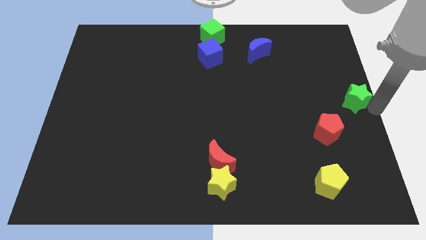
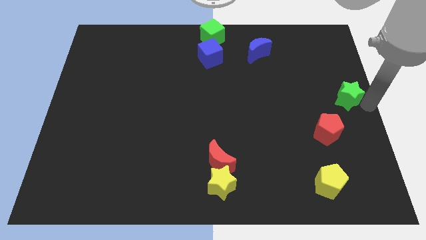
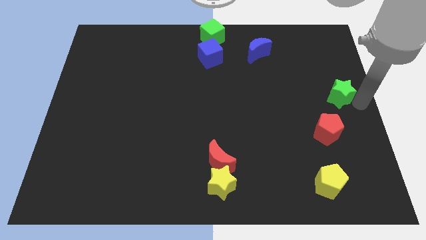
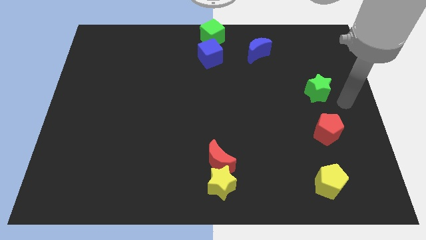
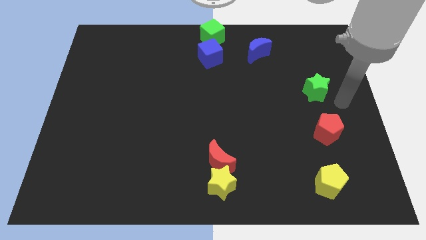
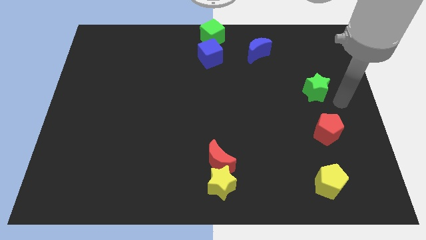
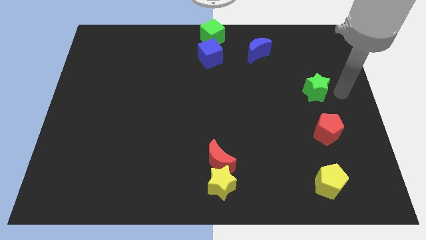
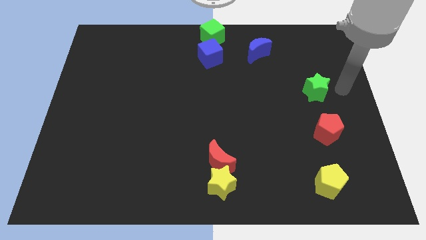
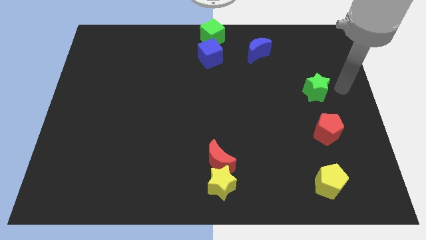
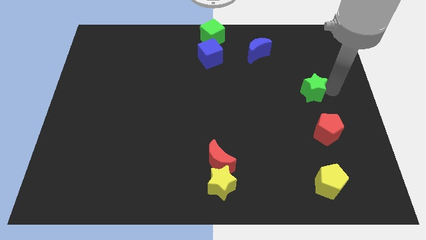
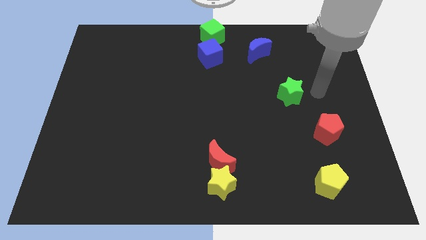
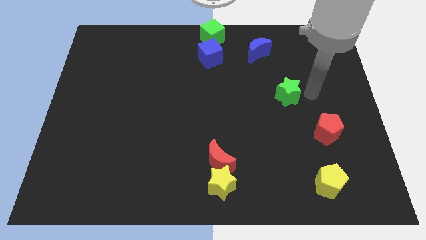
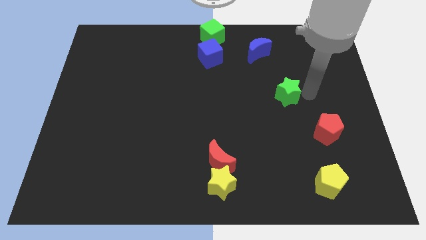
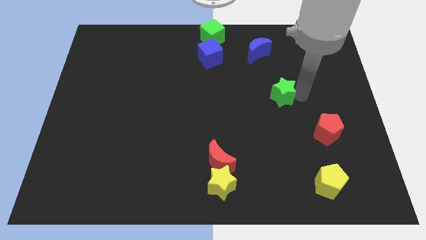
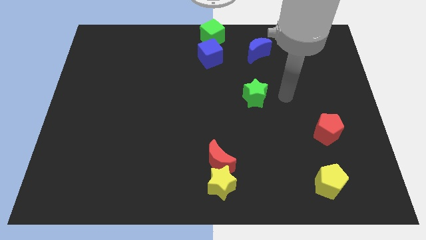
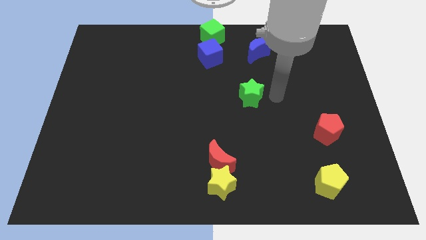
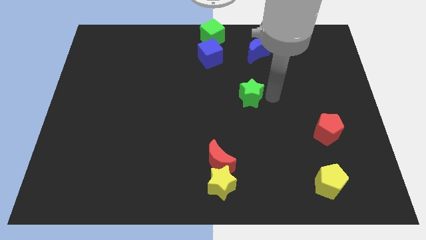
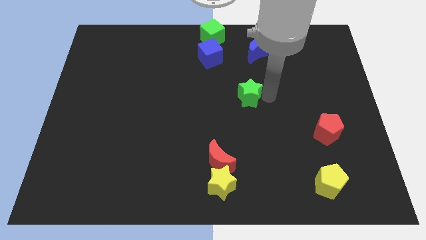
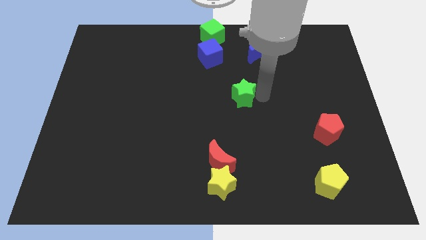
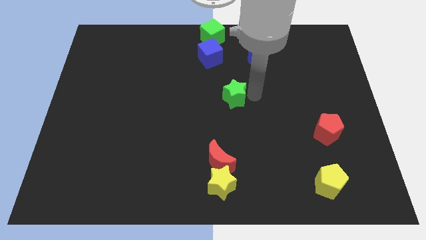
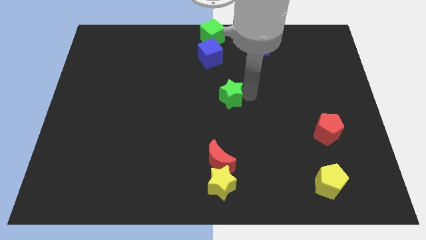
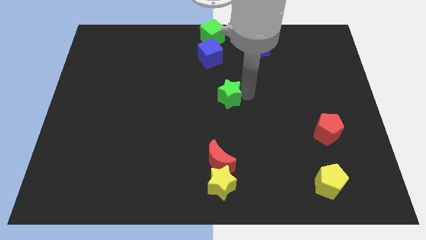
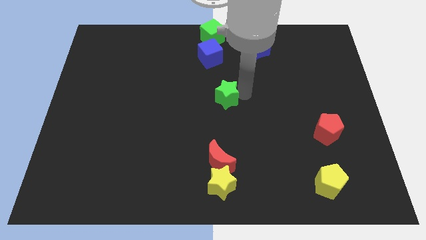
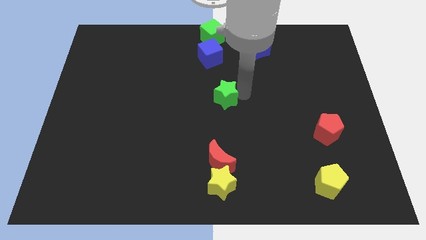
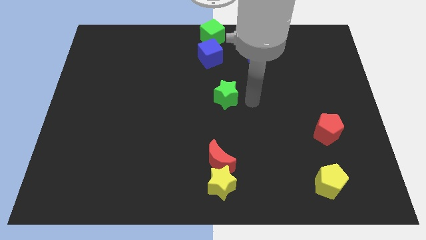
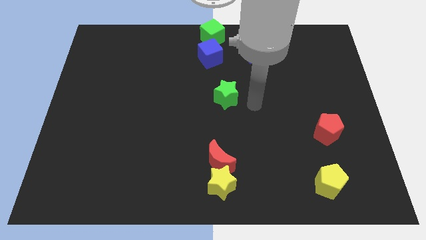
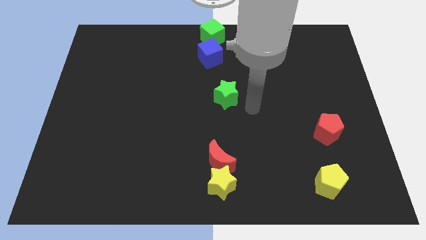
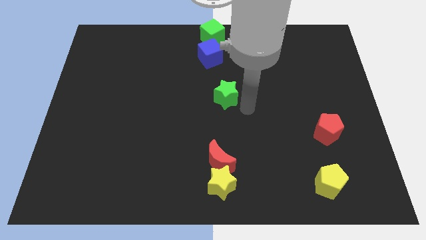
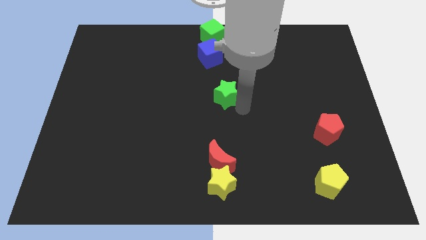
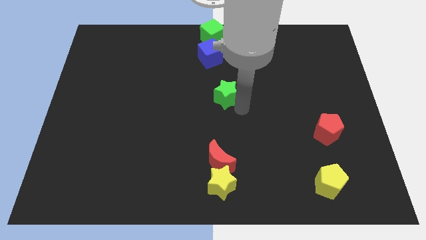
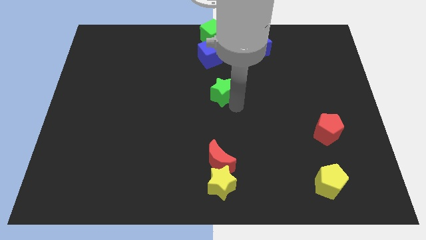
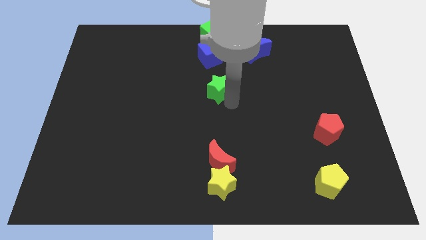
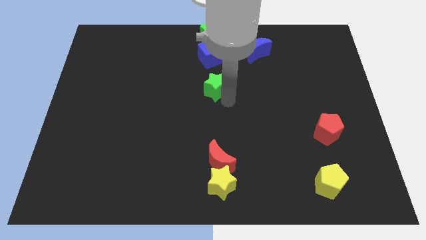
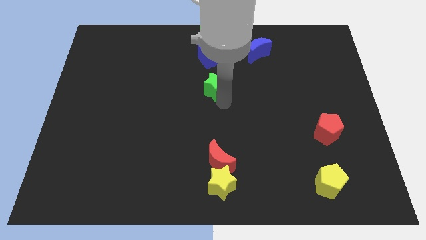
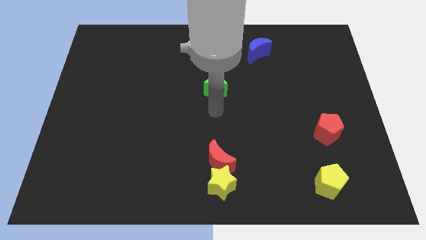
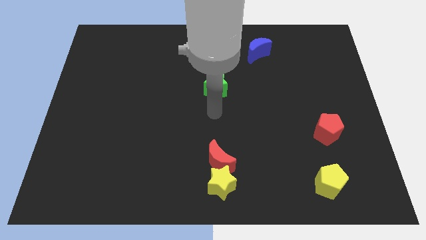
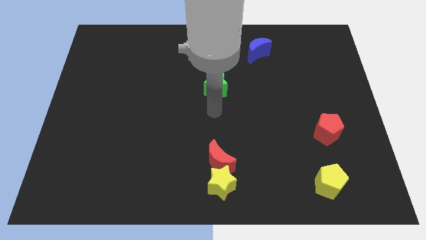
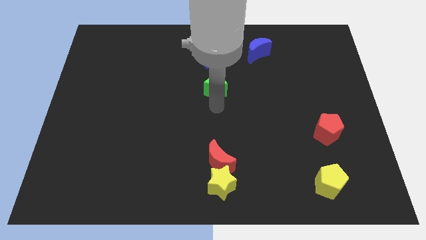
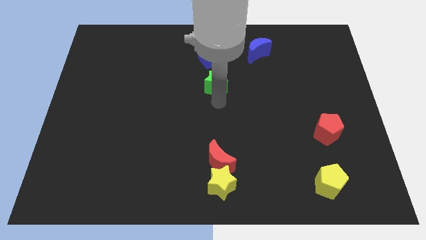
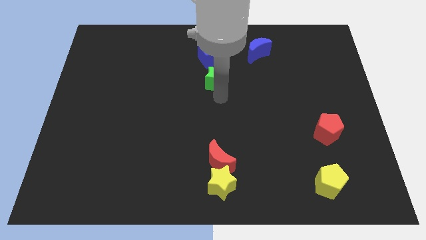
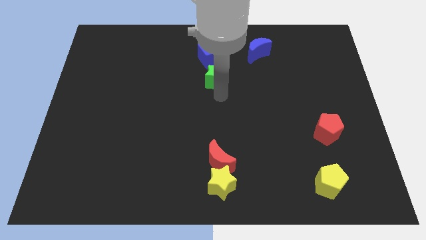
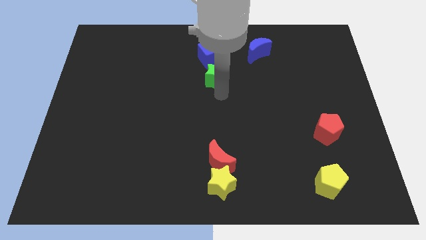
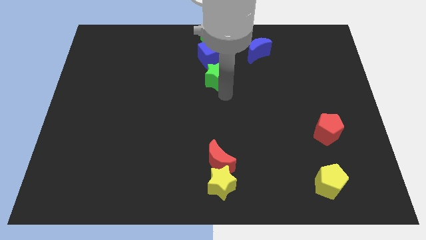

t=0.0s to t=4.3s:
place the green star at the bottom of blue cube

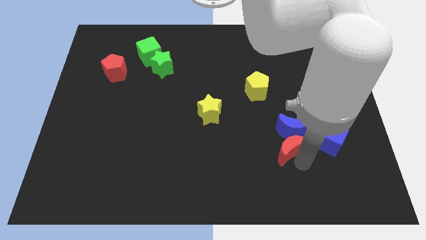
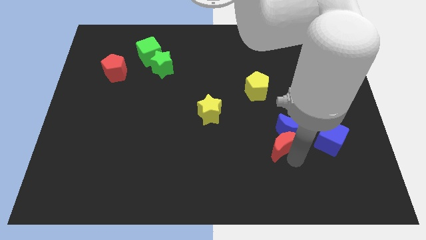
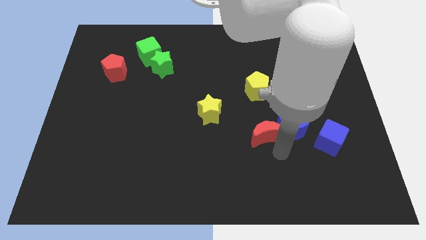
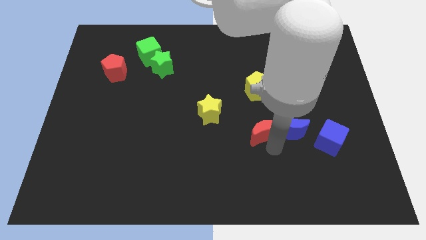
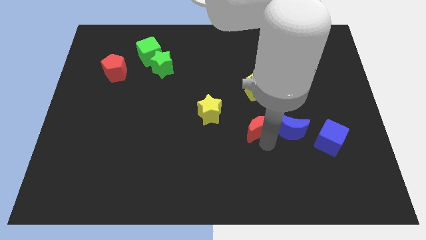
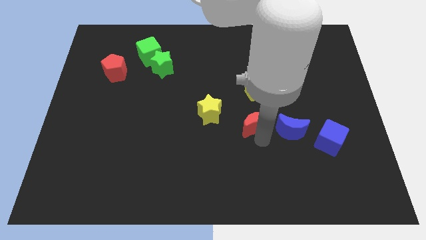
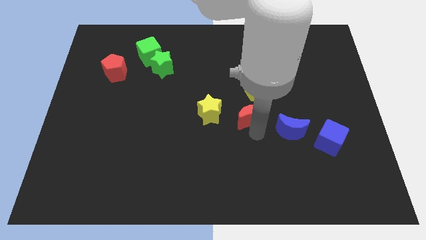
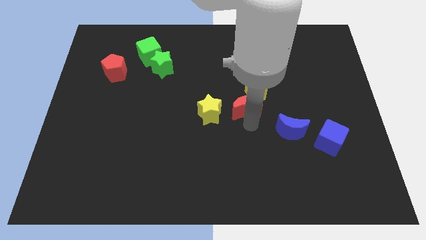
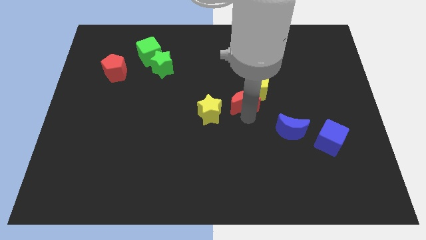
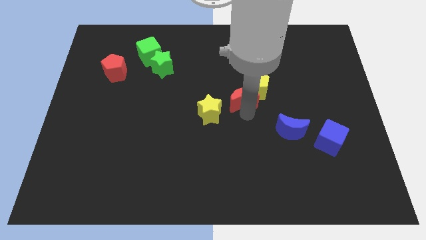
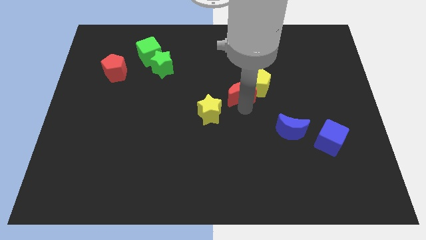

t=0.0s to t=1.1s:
make the red moon touch the bottom left of the yellow pentagon

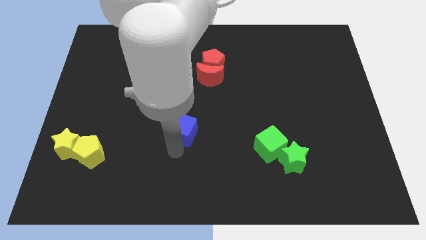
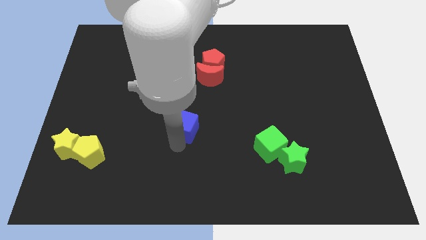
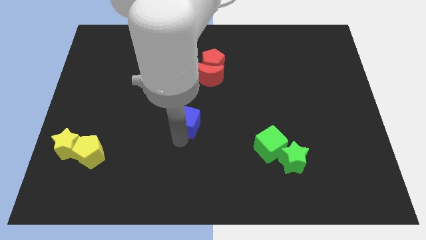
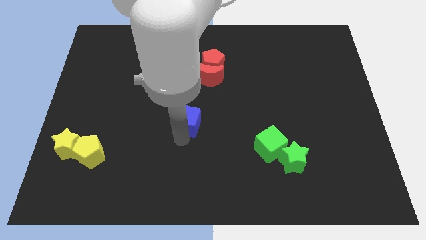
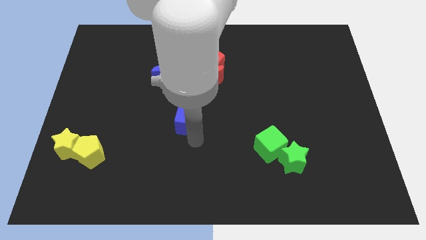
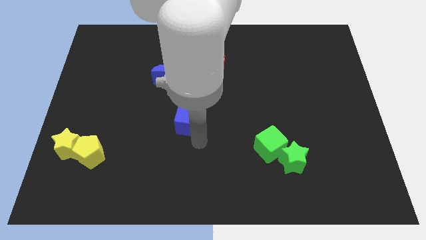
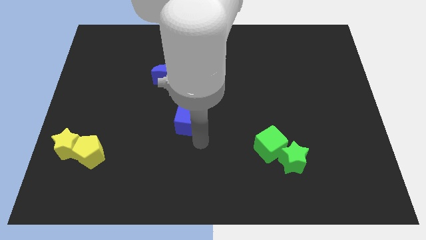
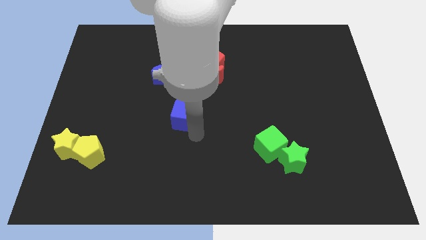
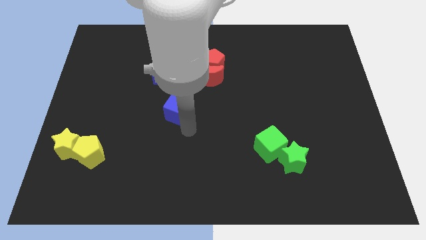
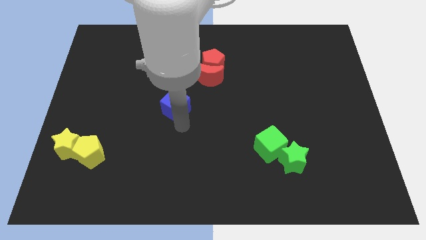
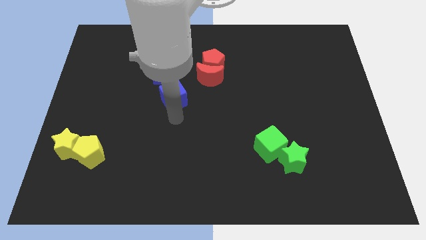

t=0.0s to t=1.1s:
place the blue cube to the bottom side of the blue crescent

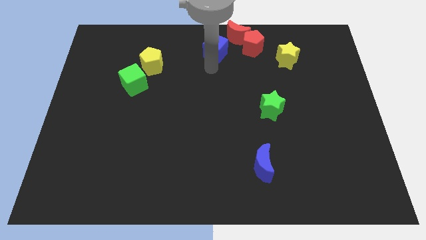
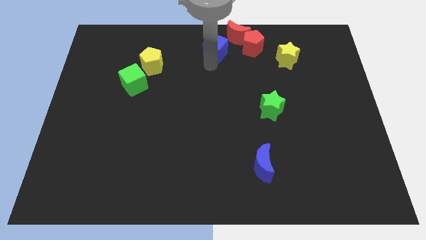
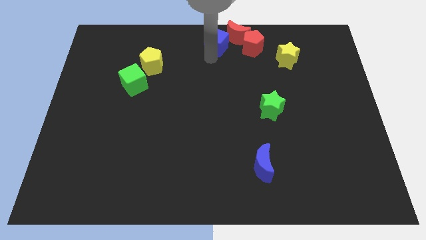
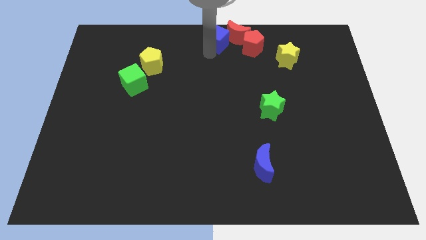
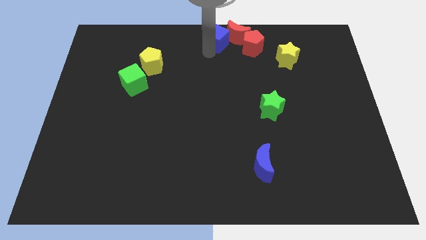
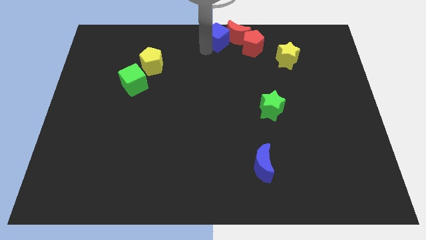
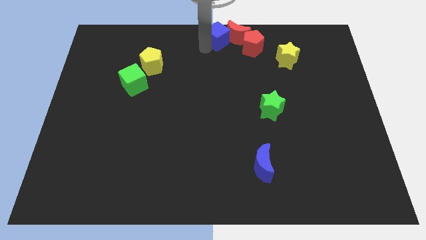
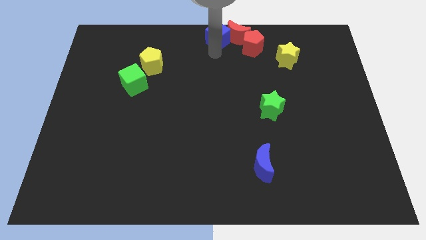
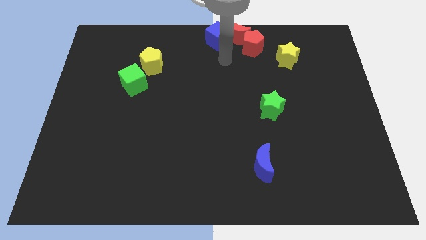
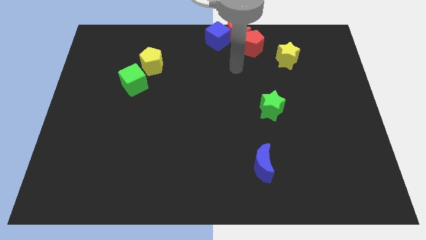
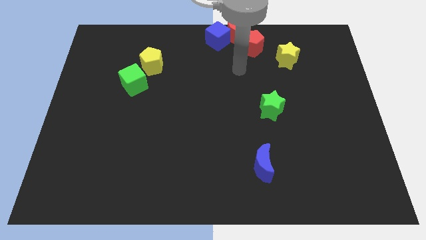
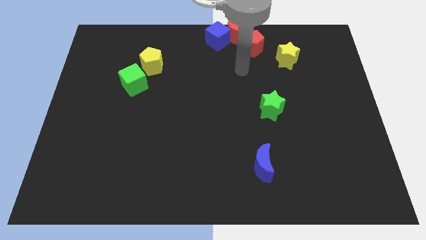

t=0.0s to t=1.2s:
place the blue cube left to the red crescent

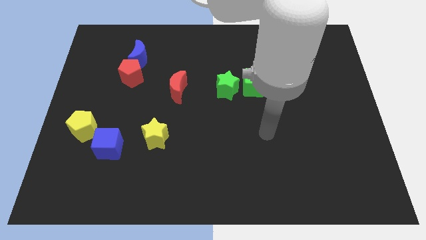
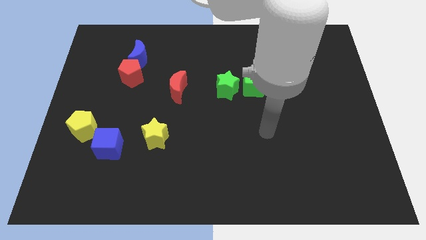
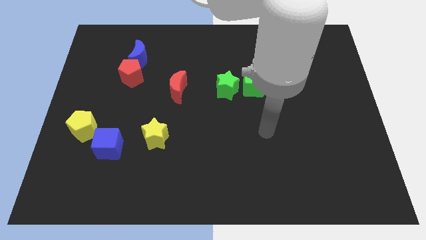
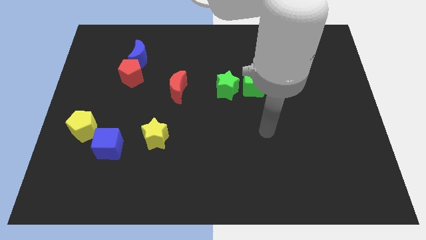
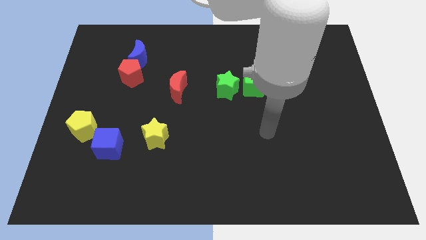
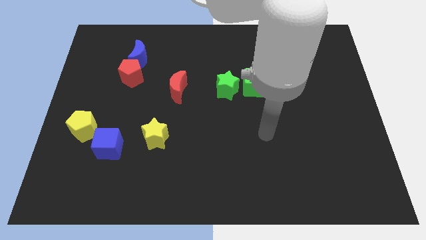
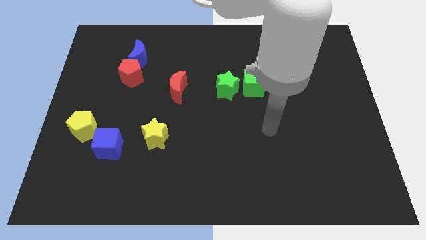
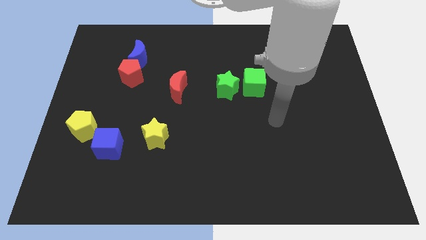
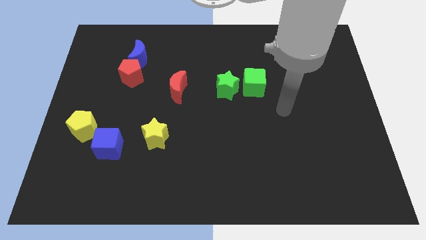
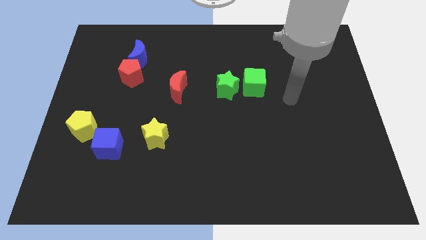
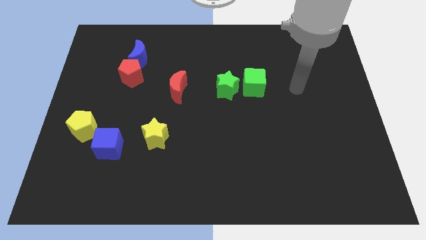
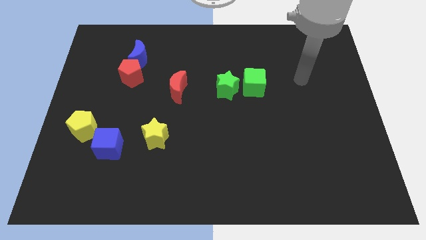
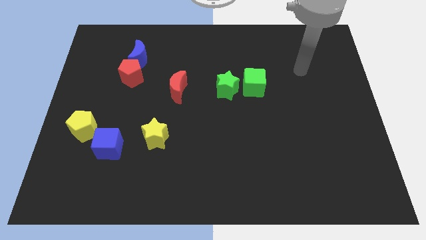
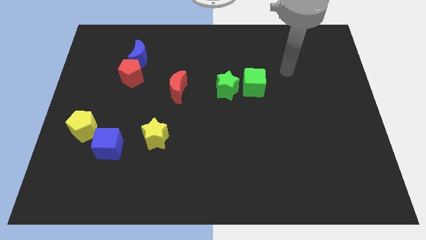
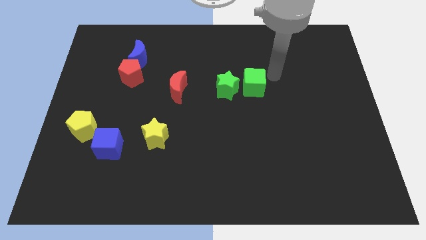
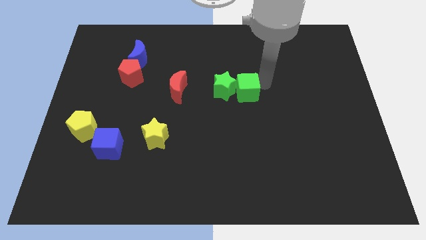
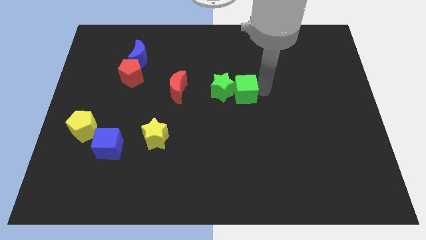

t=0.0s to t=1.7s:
push the green cube to the right of the green star
